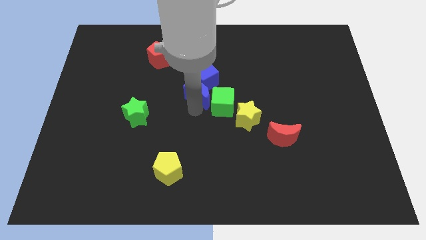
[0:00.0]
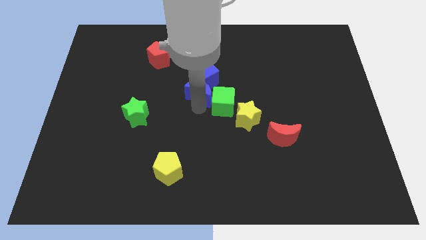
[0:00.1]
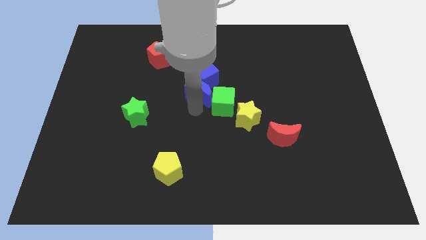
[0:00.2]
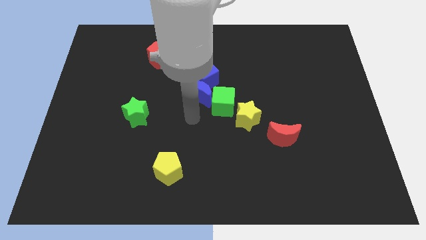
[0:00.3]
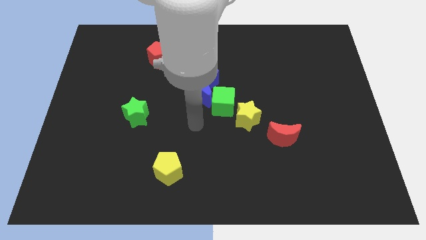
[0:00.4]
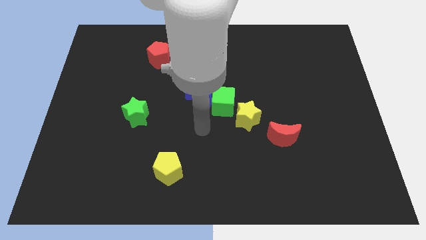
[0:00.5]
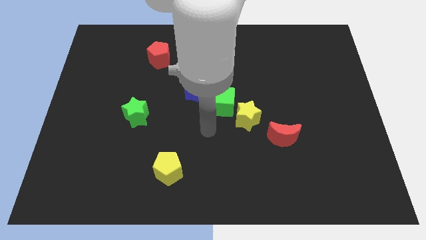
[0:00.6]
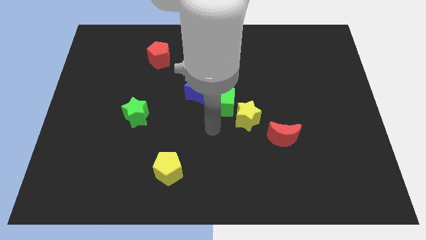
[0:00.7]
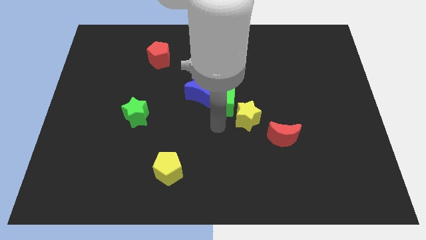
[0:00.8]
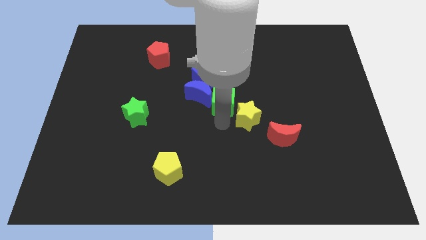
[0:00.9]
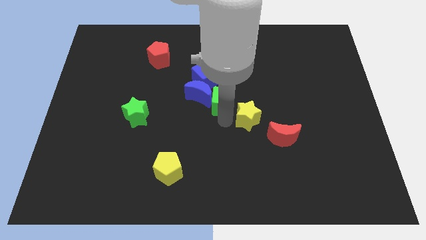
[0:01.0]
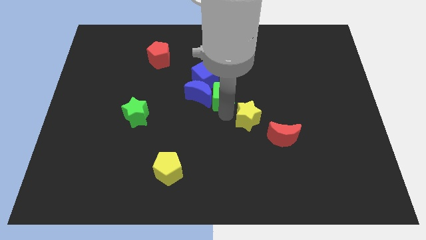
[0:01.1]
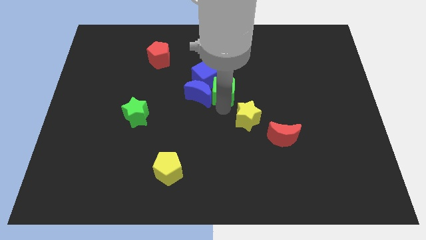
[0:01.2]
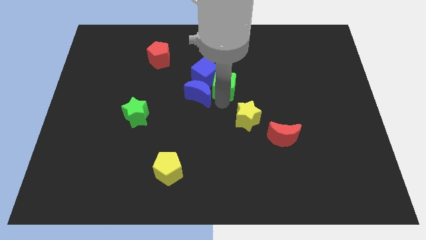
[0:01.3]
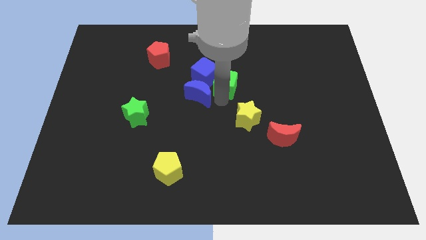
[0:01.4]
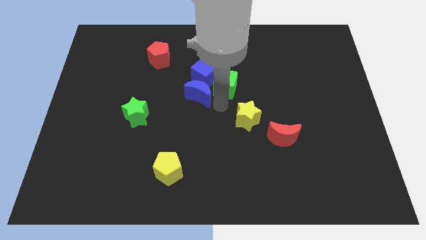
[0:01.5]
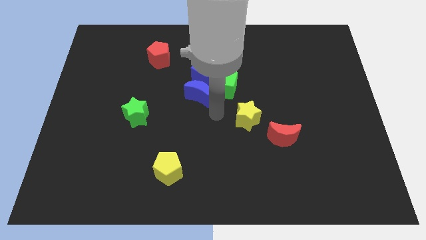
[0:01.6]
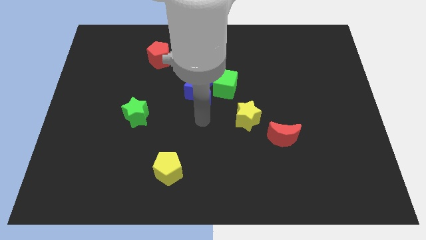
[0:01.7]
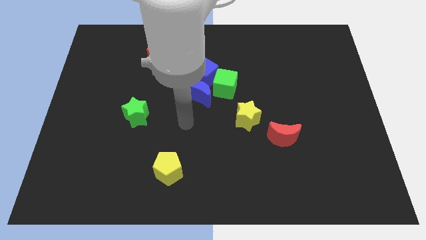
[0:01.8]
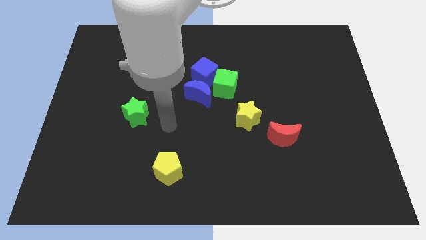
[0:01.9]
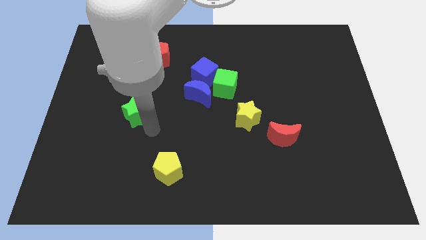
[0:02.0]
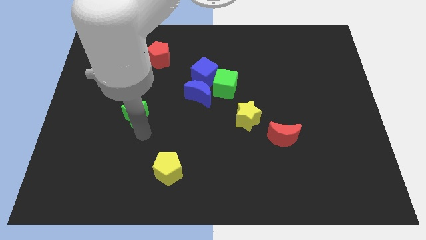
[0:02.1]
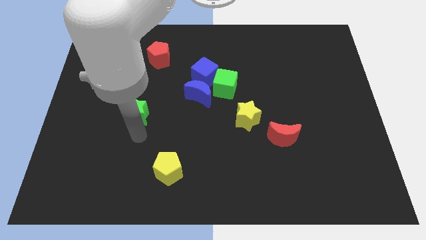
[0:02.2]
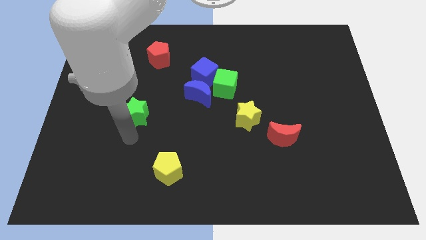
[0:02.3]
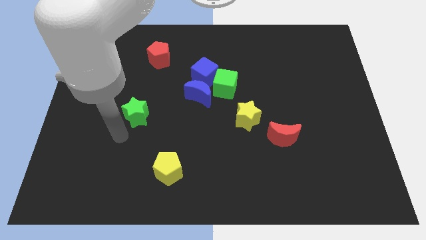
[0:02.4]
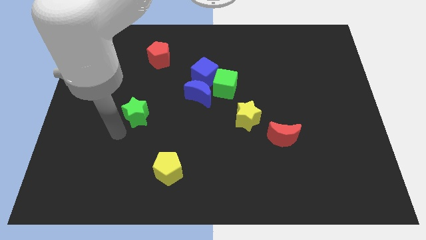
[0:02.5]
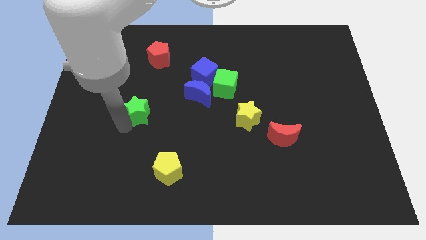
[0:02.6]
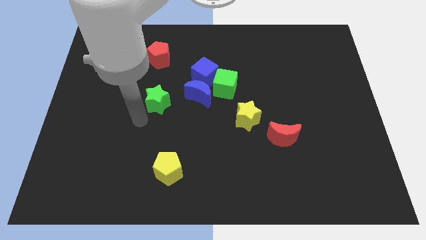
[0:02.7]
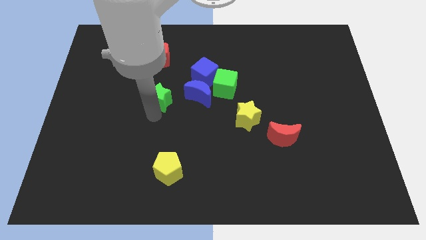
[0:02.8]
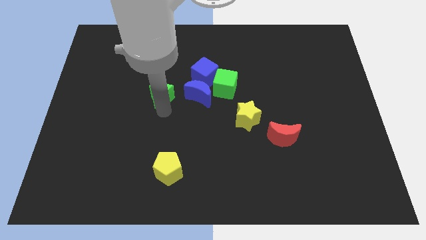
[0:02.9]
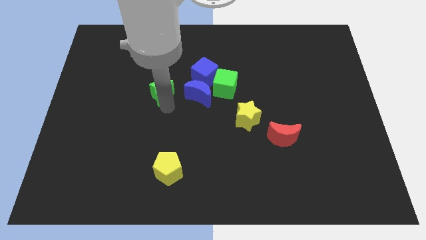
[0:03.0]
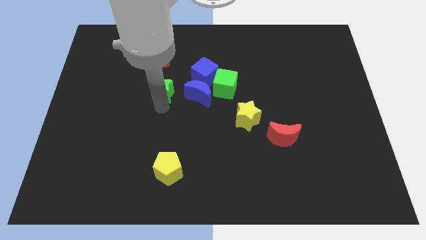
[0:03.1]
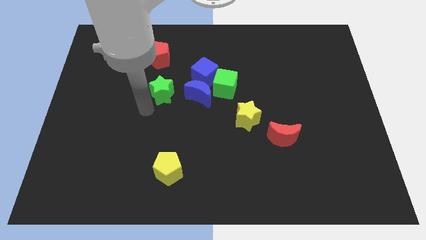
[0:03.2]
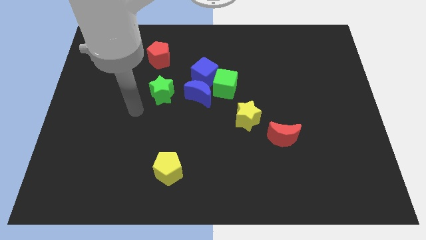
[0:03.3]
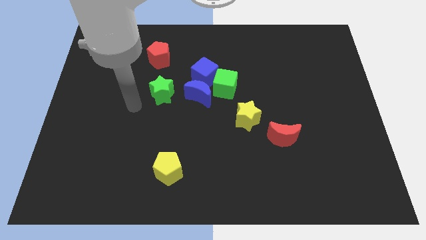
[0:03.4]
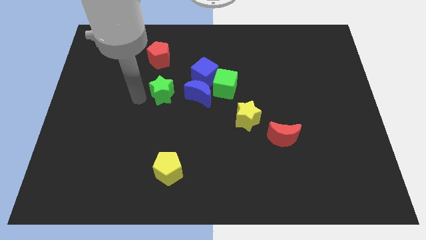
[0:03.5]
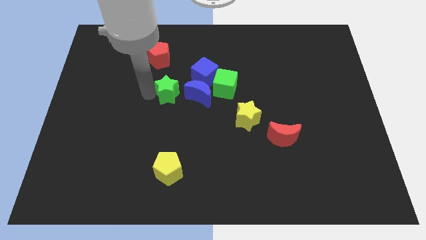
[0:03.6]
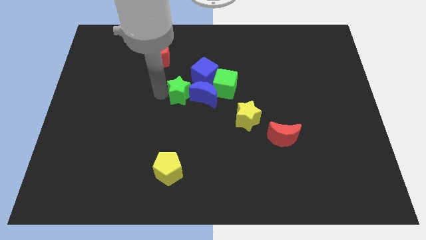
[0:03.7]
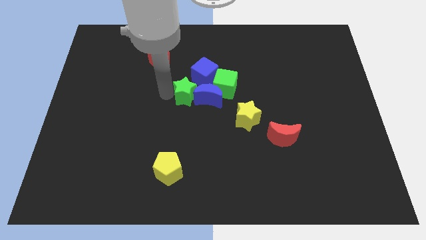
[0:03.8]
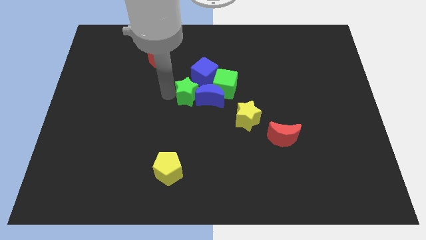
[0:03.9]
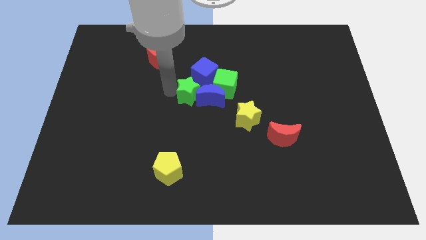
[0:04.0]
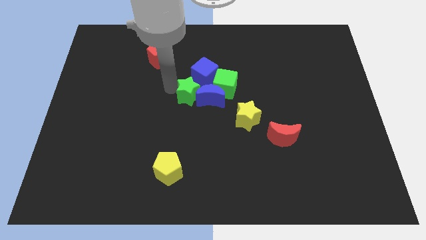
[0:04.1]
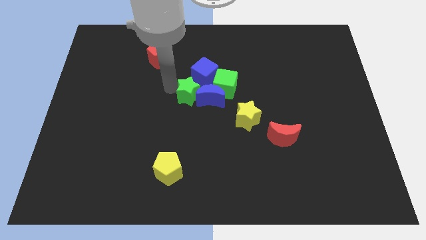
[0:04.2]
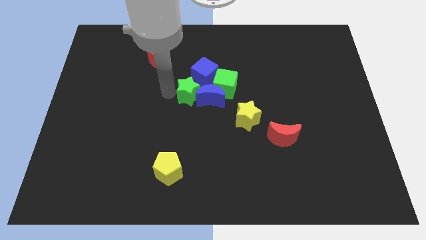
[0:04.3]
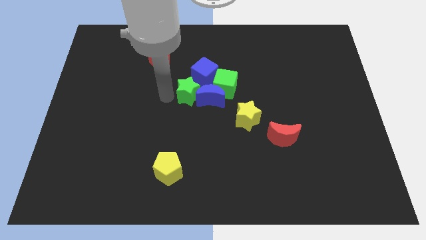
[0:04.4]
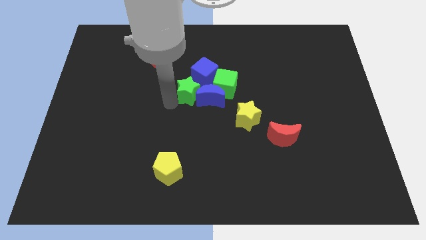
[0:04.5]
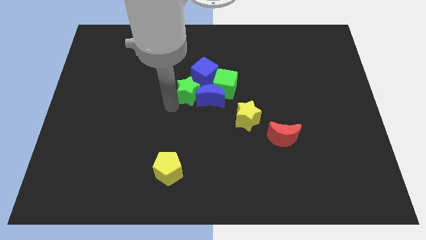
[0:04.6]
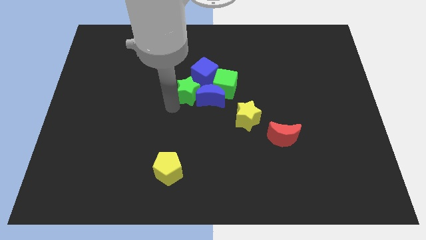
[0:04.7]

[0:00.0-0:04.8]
push the green star into the blue crescent

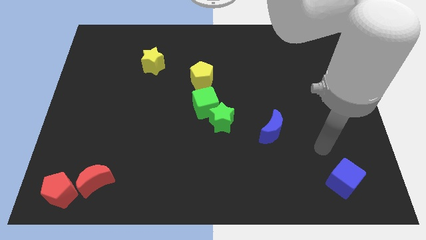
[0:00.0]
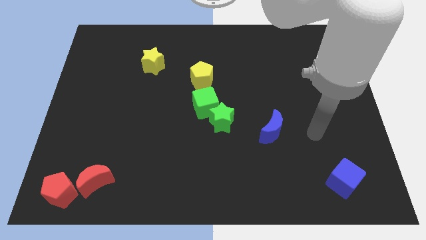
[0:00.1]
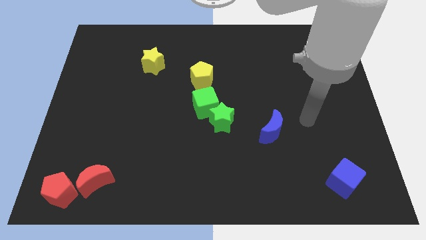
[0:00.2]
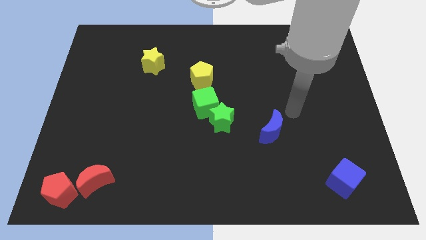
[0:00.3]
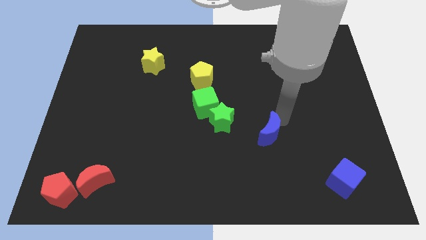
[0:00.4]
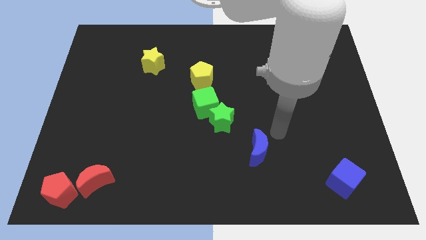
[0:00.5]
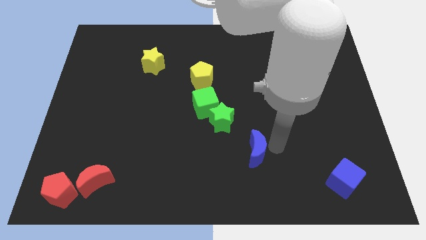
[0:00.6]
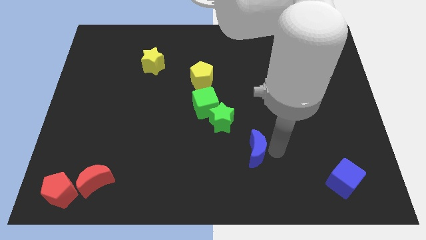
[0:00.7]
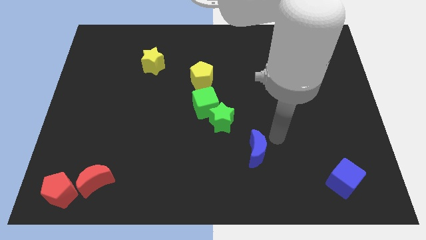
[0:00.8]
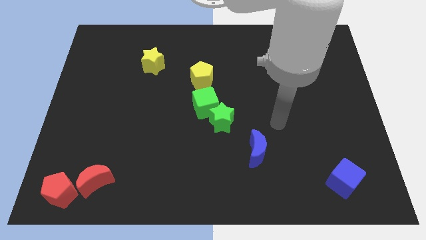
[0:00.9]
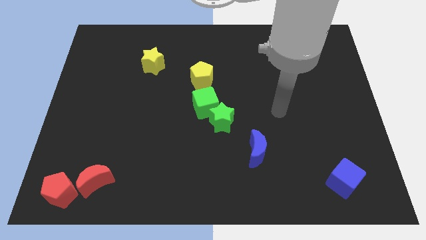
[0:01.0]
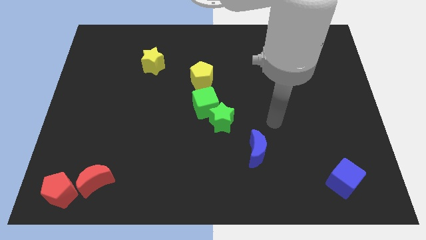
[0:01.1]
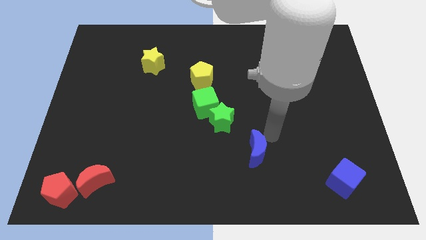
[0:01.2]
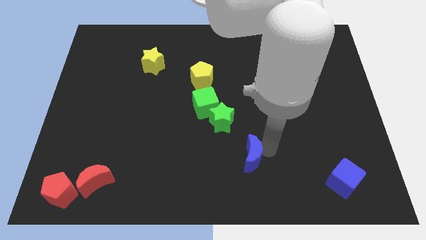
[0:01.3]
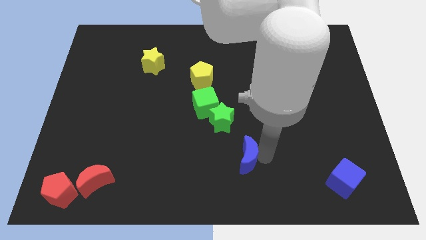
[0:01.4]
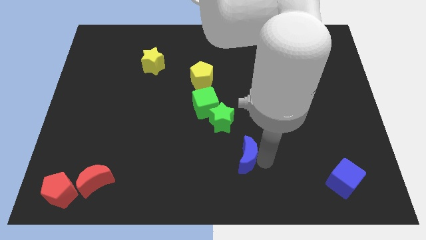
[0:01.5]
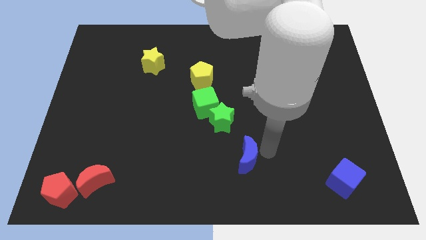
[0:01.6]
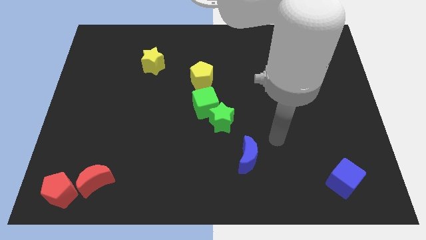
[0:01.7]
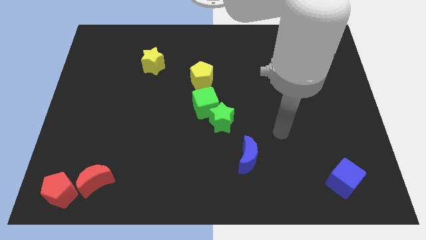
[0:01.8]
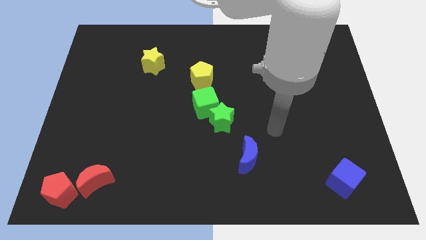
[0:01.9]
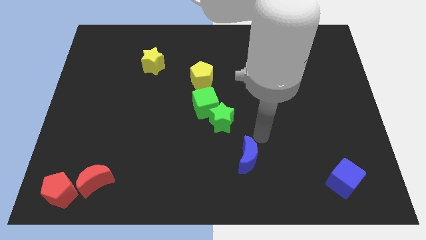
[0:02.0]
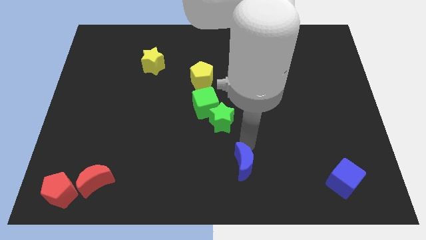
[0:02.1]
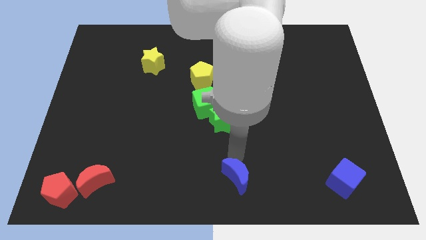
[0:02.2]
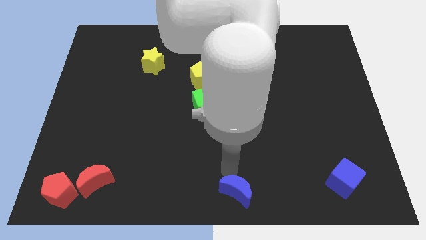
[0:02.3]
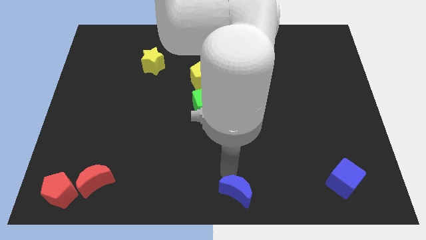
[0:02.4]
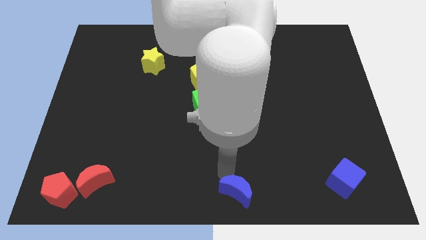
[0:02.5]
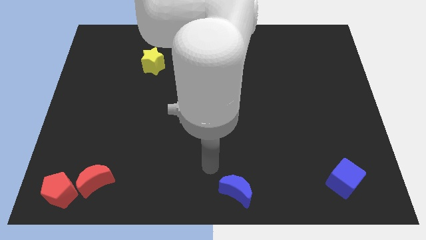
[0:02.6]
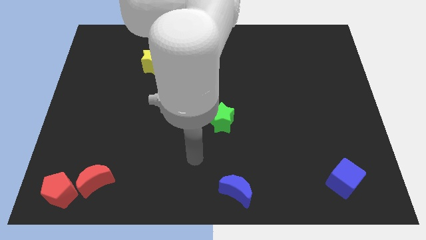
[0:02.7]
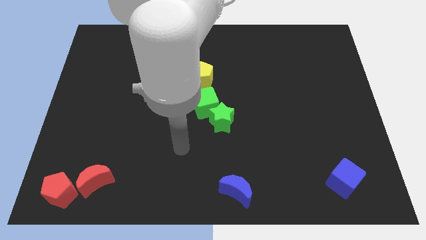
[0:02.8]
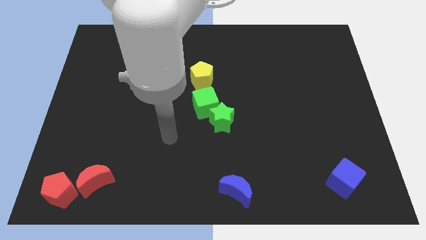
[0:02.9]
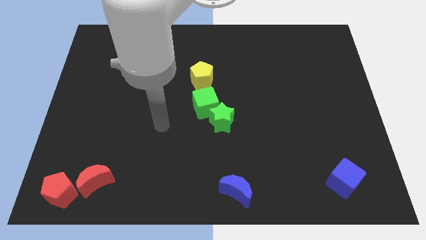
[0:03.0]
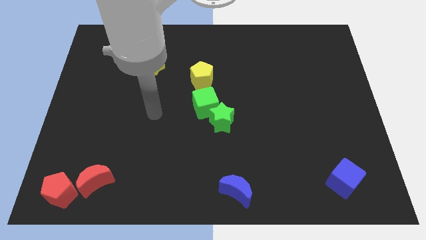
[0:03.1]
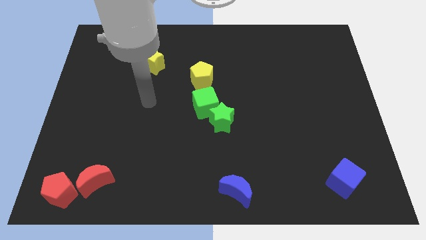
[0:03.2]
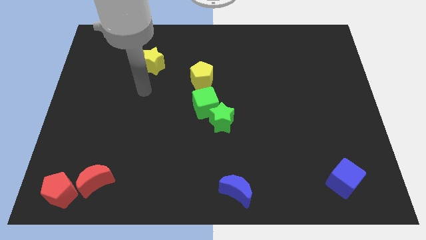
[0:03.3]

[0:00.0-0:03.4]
slide the blue moon to the bottom center of the board

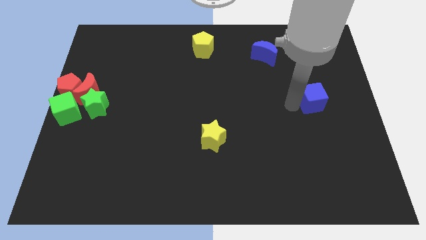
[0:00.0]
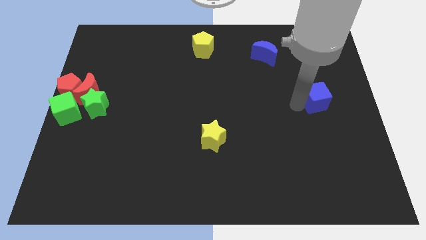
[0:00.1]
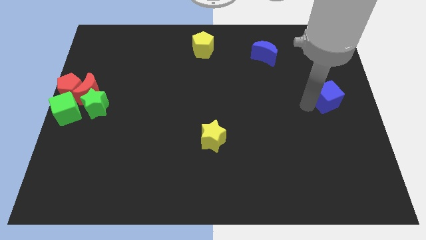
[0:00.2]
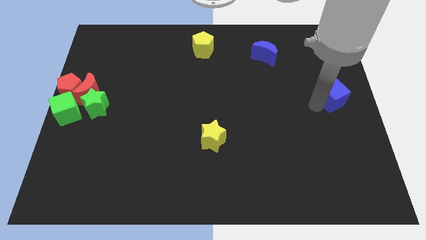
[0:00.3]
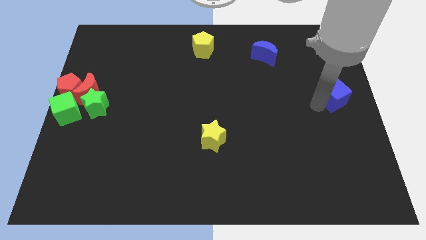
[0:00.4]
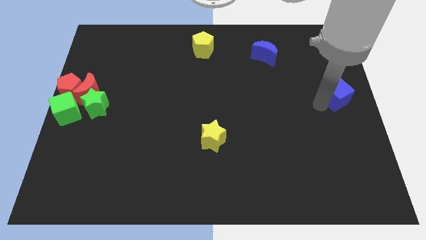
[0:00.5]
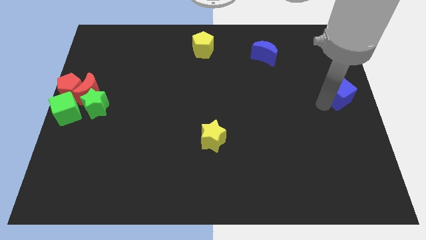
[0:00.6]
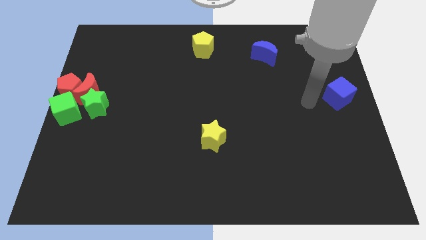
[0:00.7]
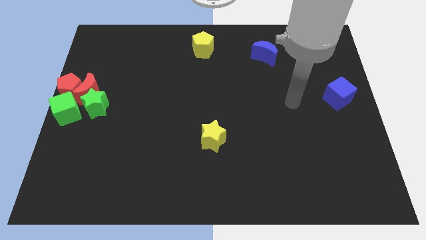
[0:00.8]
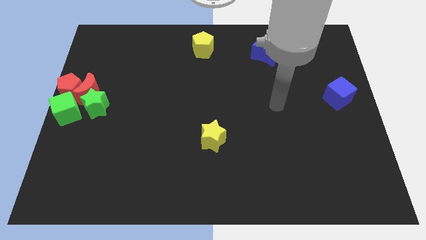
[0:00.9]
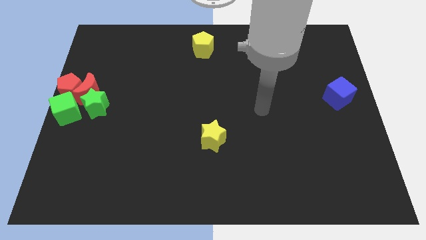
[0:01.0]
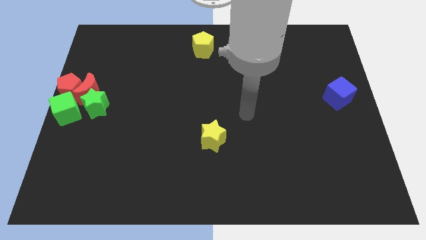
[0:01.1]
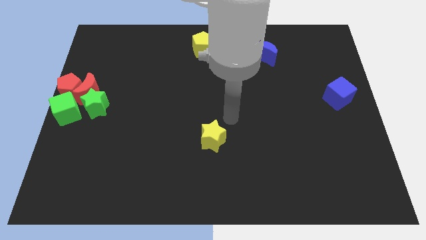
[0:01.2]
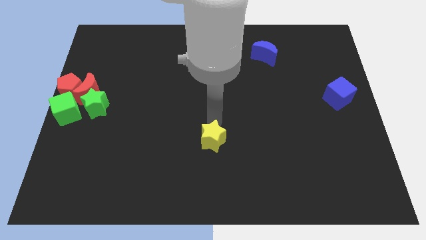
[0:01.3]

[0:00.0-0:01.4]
move the blue cube towards the center right side of the board
